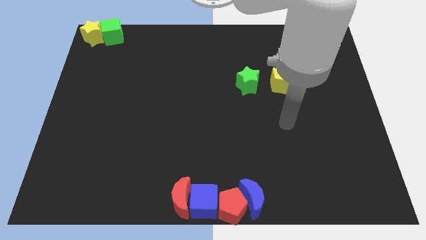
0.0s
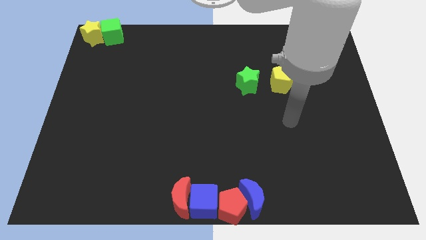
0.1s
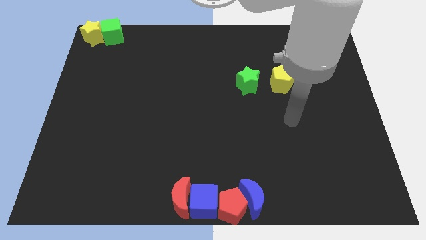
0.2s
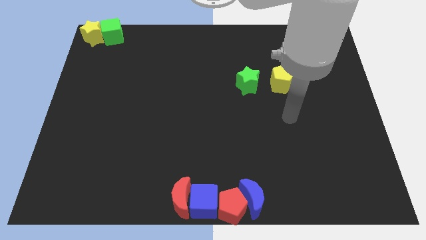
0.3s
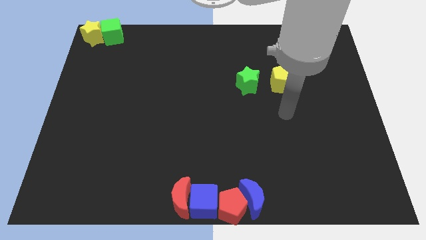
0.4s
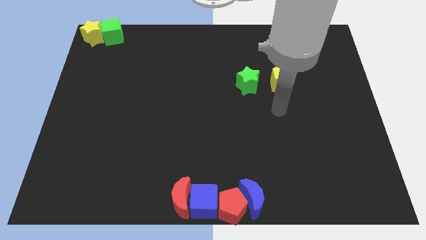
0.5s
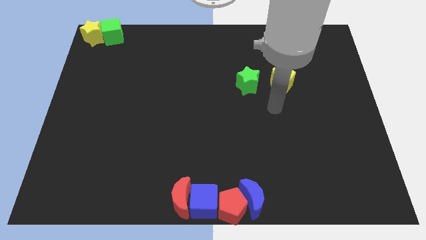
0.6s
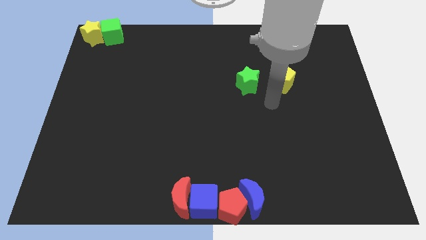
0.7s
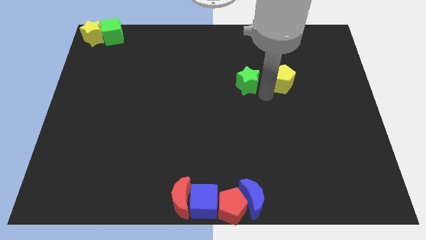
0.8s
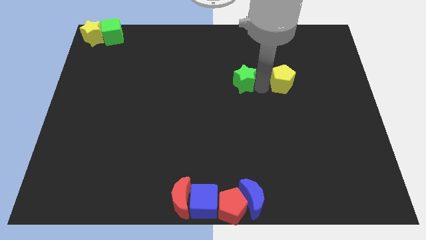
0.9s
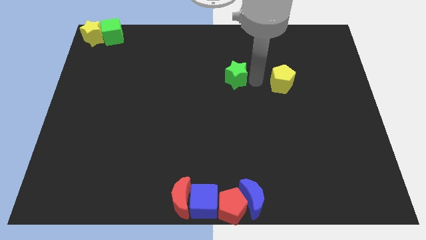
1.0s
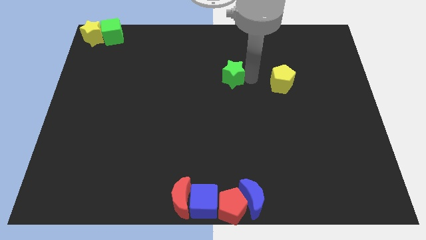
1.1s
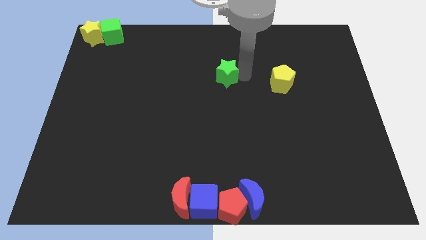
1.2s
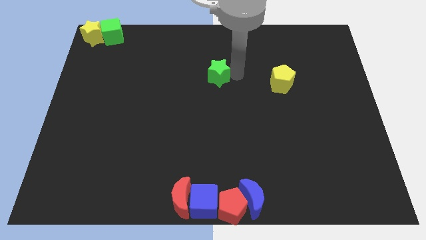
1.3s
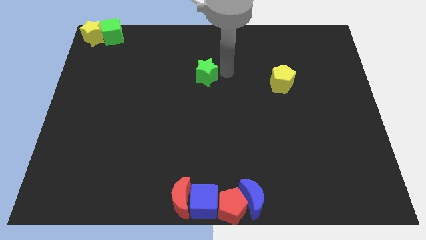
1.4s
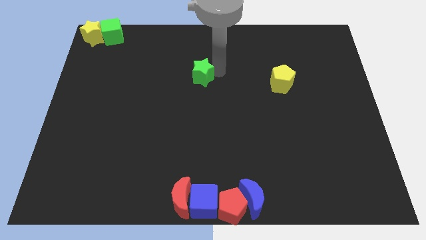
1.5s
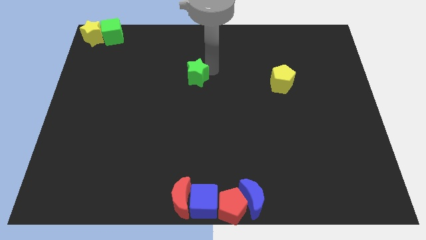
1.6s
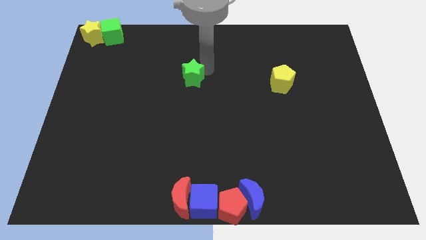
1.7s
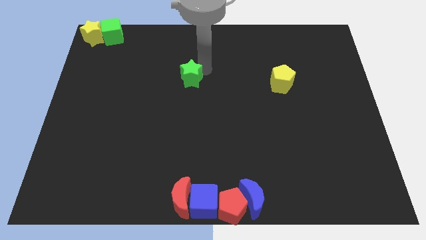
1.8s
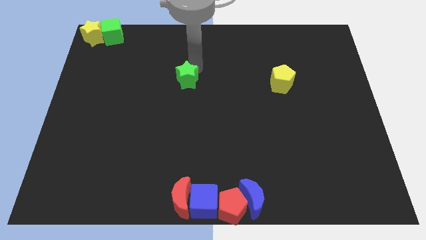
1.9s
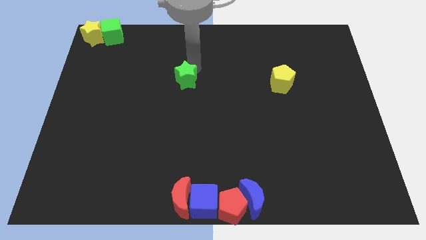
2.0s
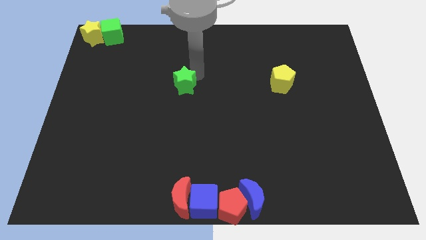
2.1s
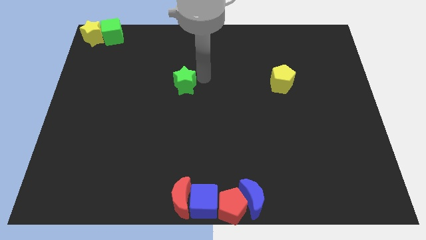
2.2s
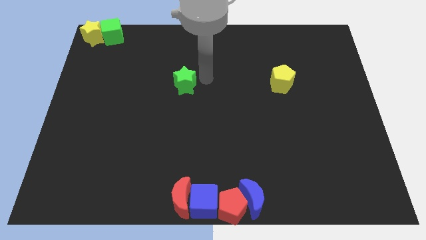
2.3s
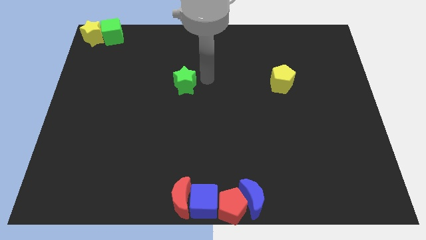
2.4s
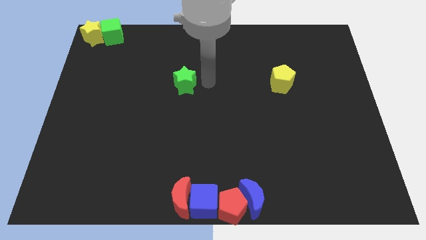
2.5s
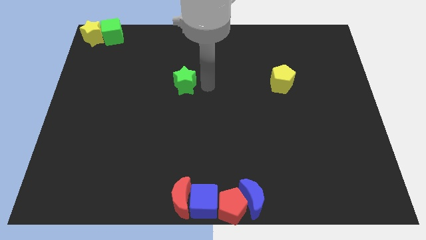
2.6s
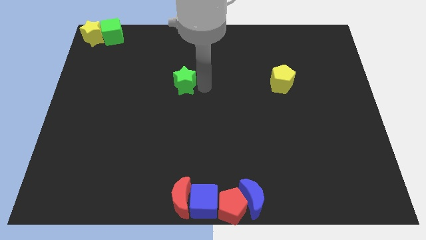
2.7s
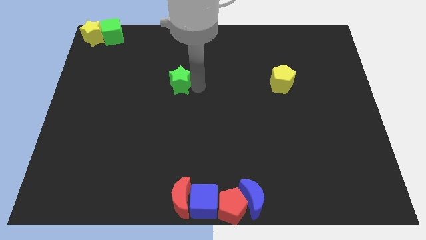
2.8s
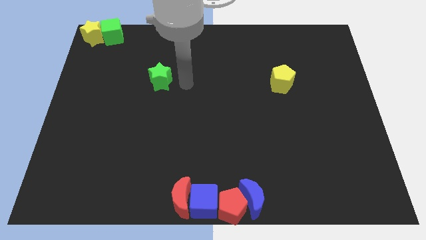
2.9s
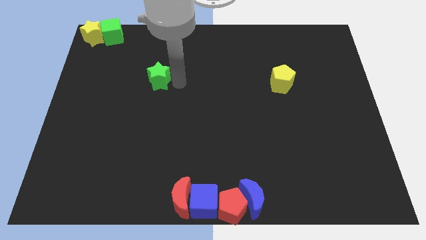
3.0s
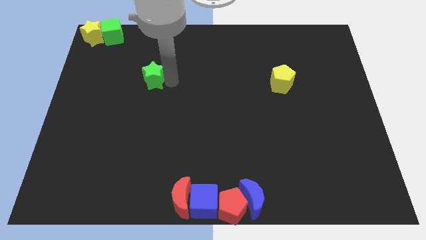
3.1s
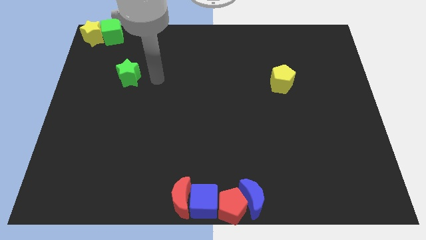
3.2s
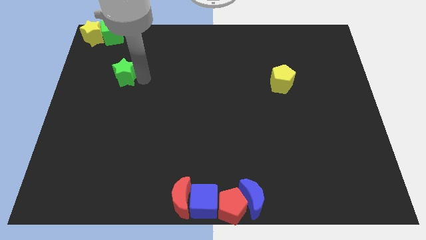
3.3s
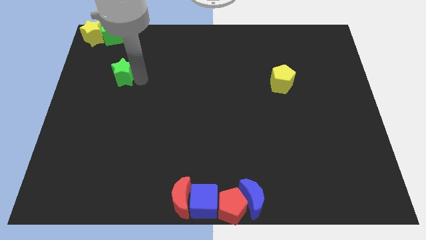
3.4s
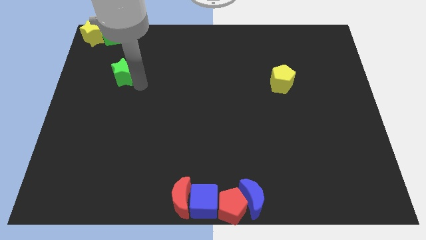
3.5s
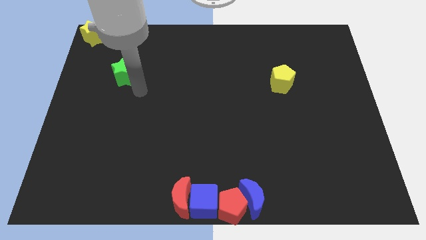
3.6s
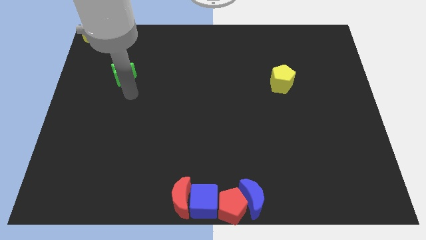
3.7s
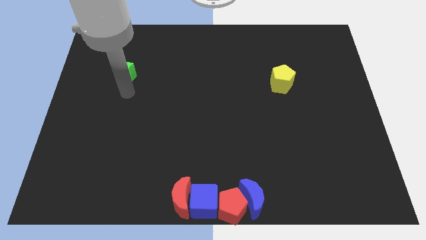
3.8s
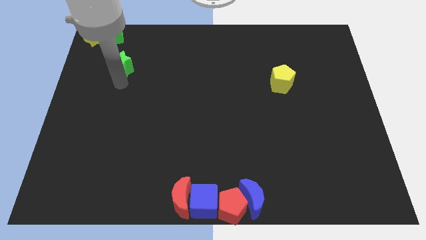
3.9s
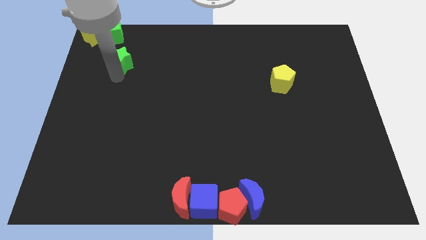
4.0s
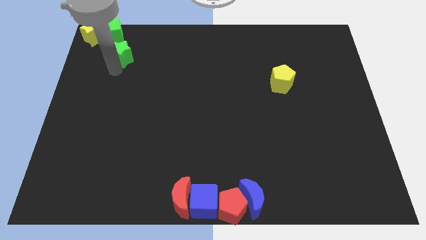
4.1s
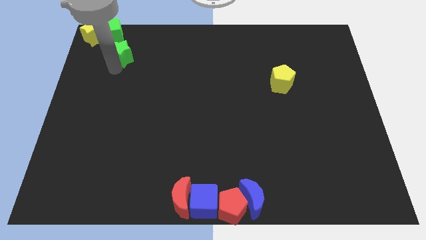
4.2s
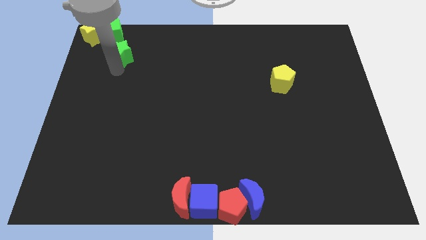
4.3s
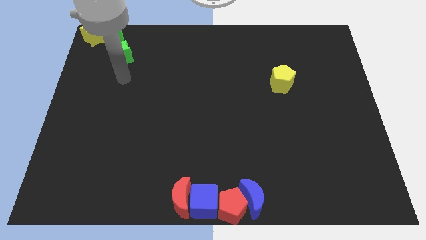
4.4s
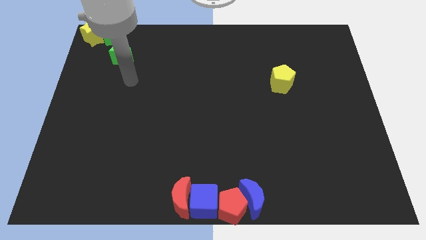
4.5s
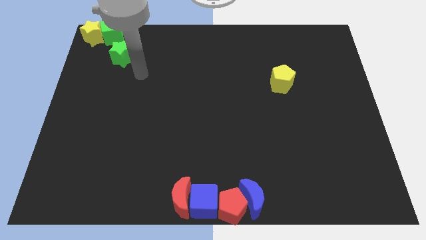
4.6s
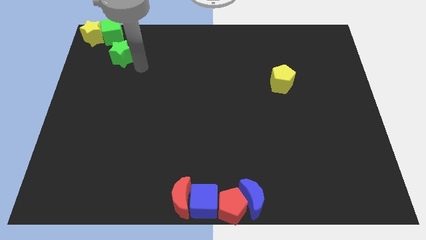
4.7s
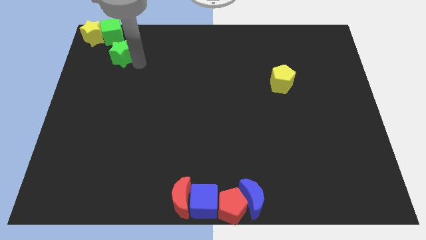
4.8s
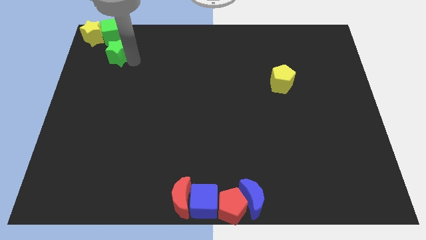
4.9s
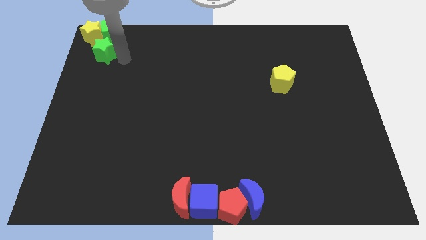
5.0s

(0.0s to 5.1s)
slide green star towards top left

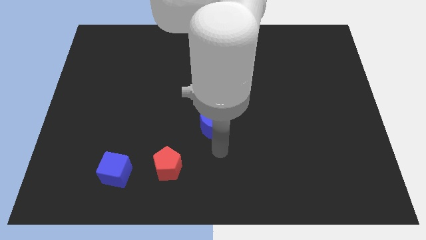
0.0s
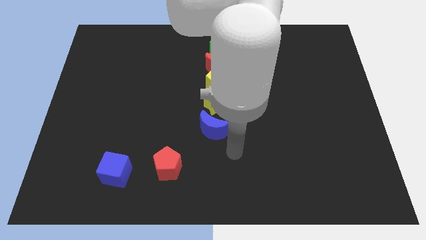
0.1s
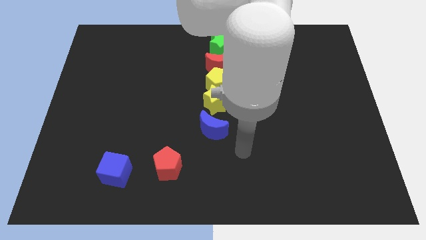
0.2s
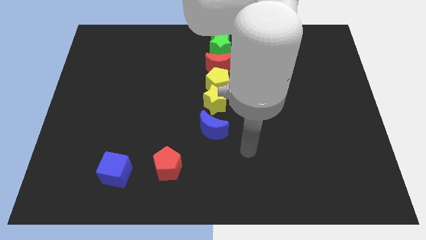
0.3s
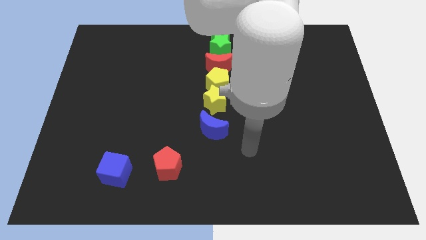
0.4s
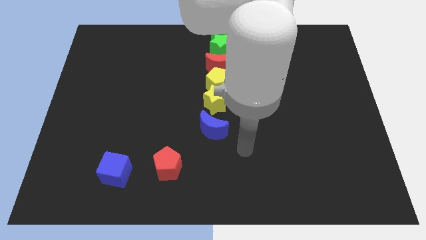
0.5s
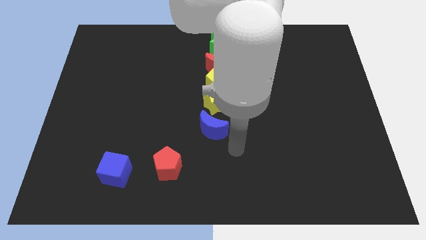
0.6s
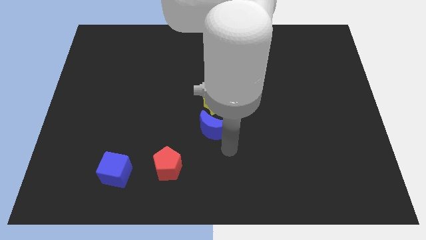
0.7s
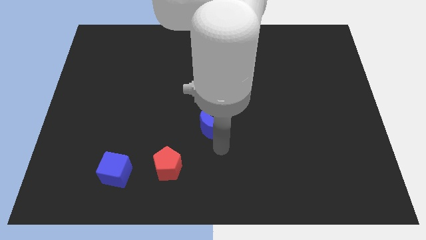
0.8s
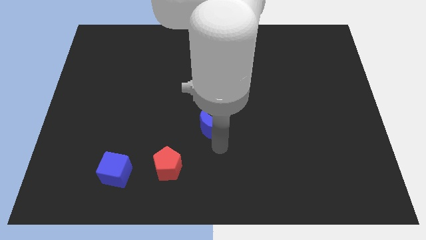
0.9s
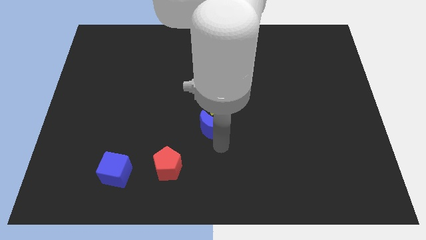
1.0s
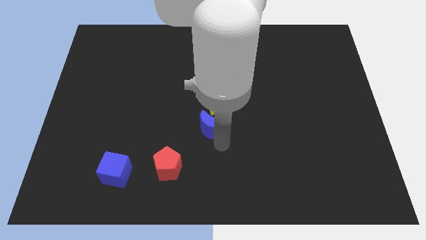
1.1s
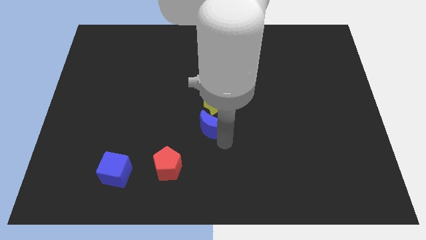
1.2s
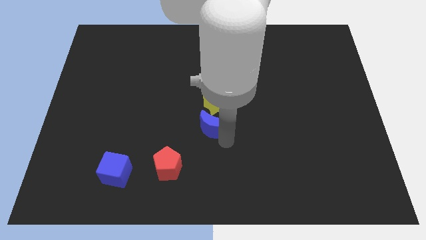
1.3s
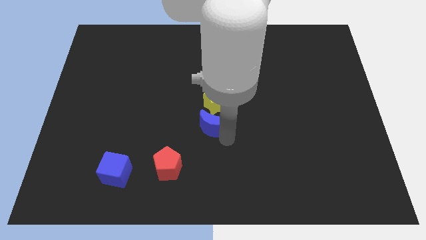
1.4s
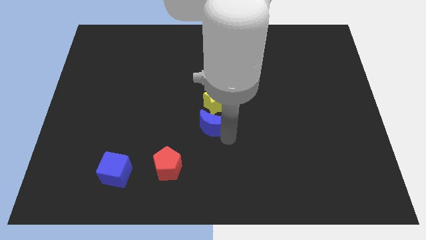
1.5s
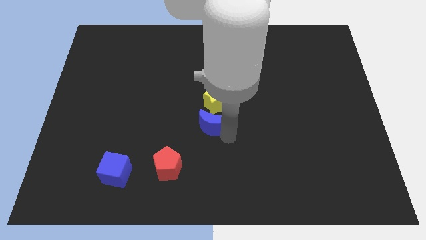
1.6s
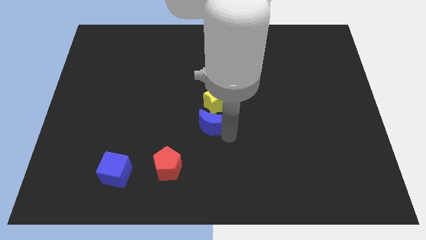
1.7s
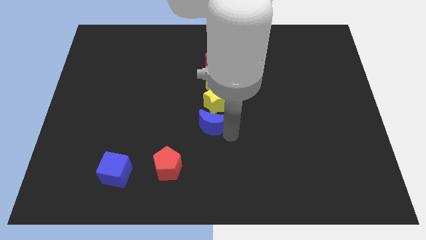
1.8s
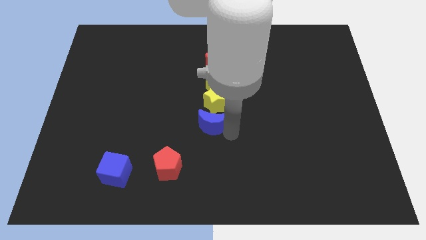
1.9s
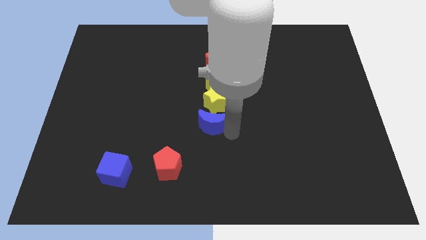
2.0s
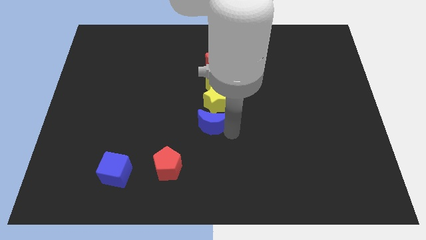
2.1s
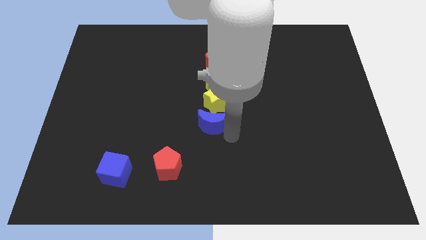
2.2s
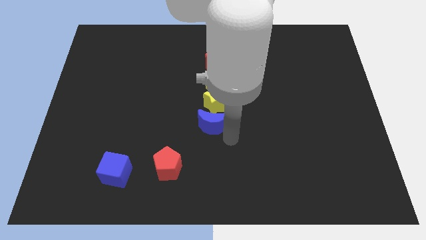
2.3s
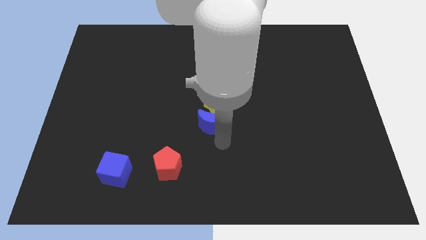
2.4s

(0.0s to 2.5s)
place the blue crescent below the yellow star

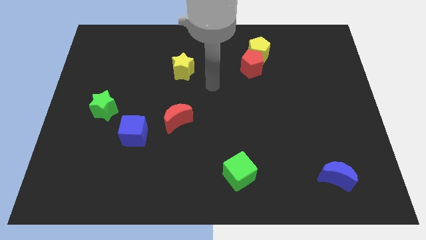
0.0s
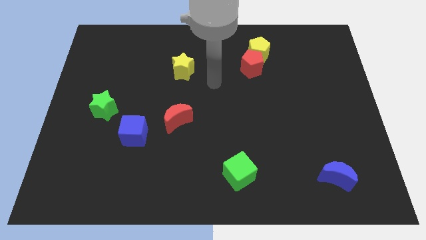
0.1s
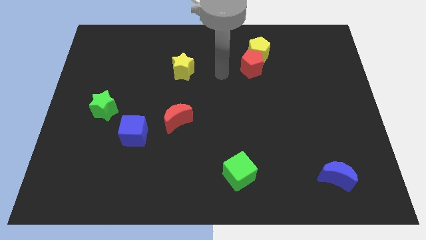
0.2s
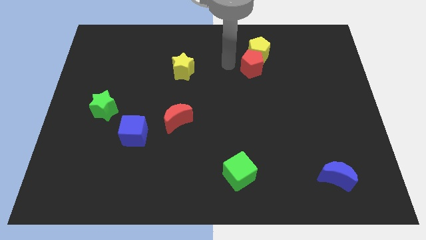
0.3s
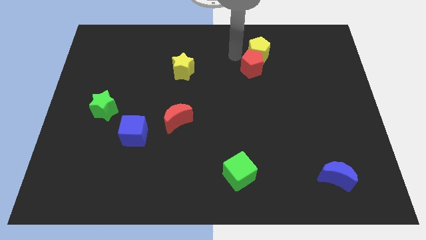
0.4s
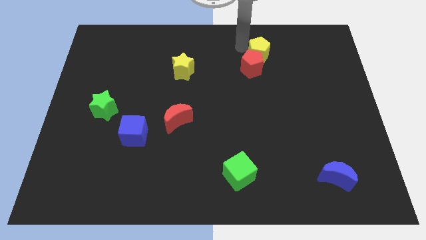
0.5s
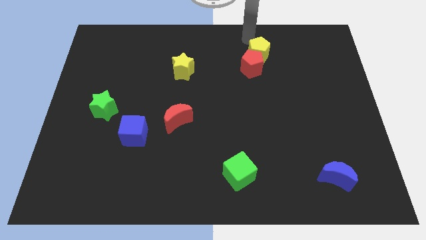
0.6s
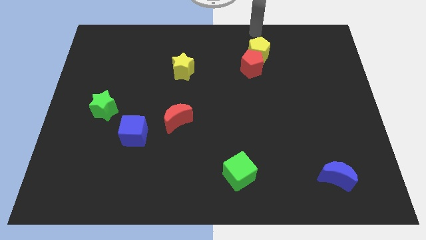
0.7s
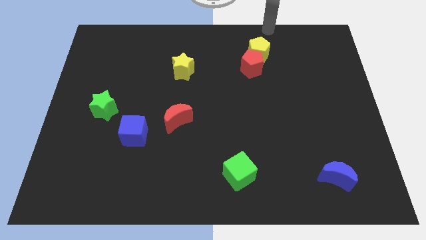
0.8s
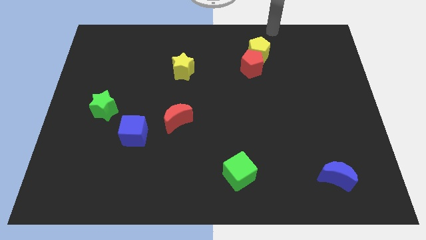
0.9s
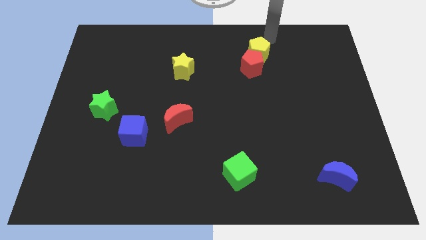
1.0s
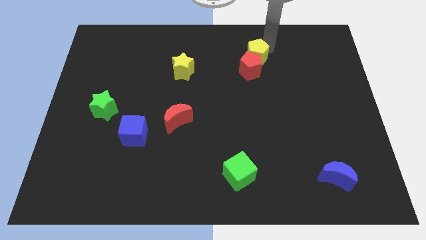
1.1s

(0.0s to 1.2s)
move the arm towards the top of the yellow pentagon

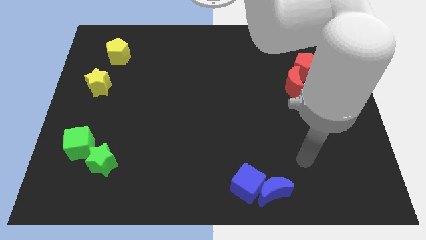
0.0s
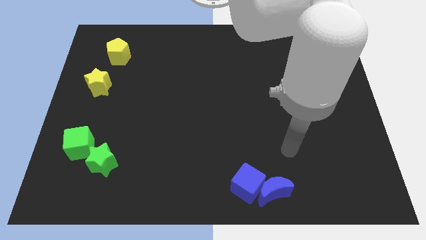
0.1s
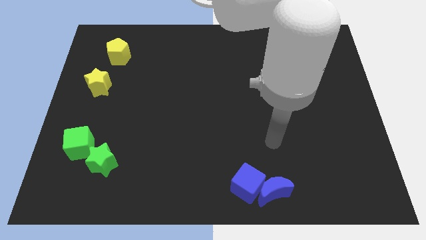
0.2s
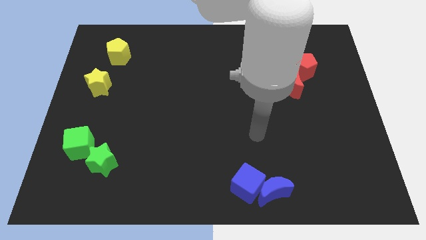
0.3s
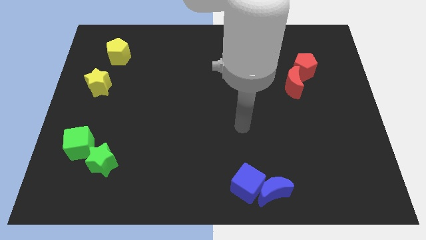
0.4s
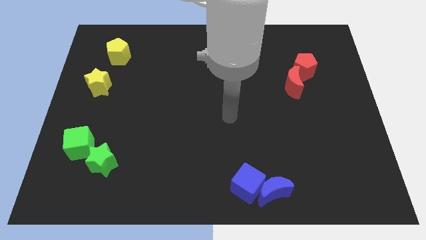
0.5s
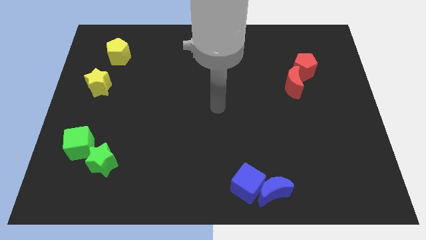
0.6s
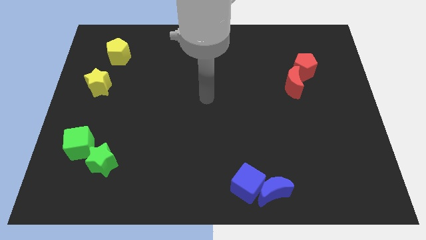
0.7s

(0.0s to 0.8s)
move your arm to the centre of the board
